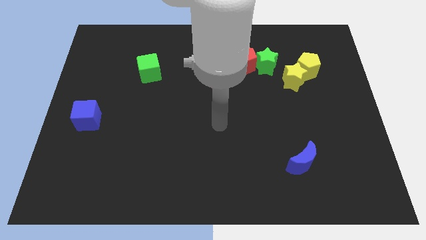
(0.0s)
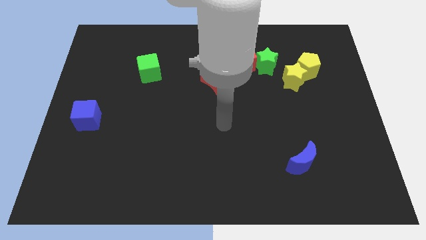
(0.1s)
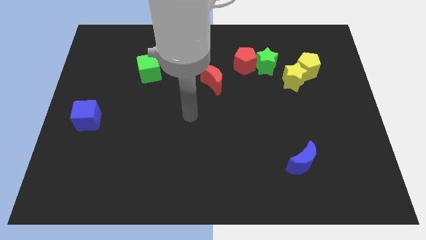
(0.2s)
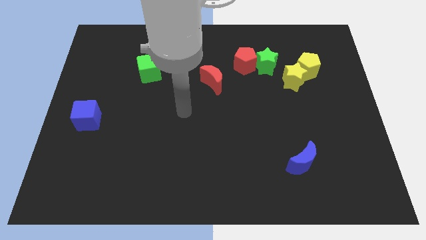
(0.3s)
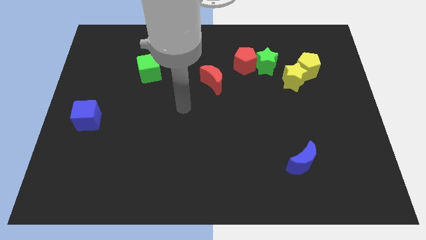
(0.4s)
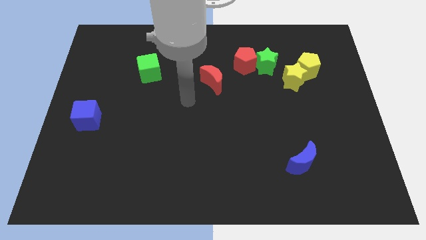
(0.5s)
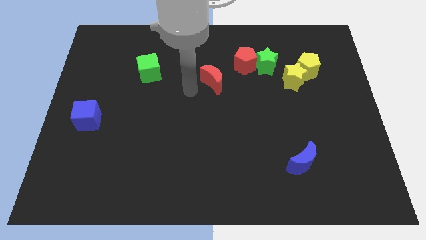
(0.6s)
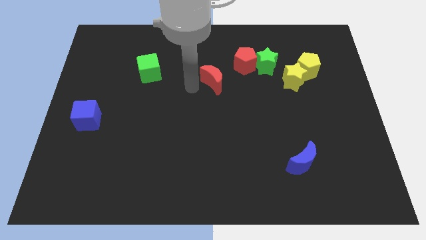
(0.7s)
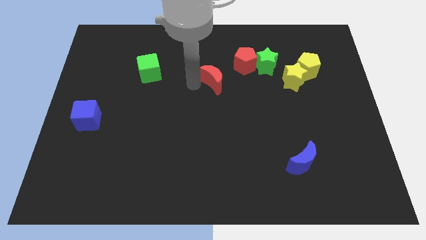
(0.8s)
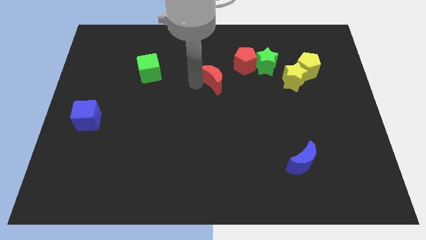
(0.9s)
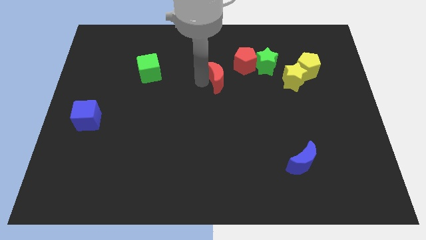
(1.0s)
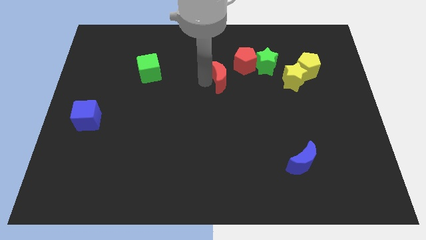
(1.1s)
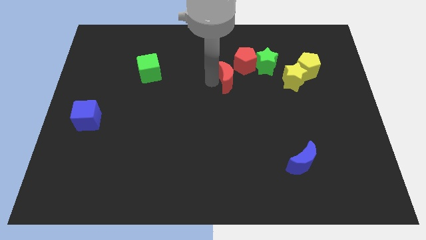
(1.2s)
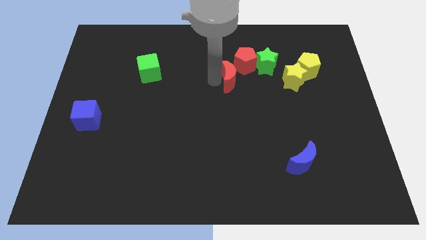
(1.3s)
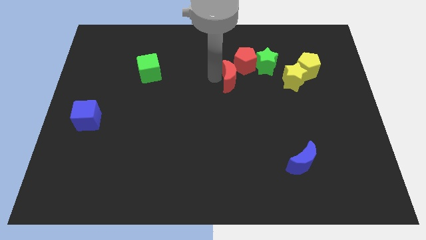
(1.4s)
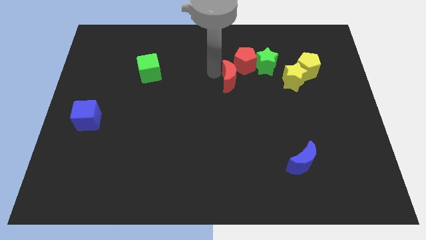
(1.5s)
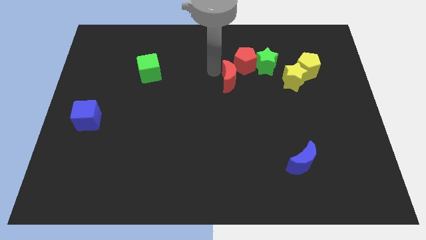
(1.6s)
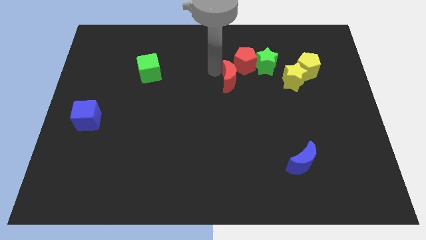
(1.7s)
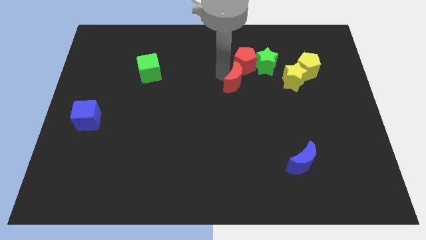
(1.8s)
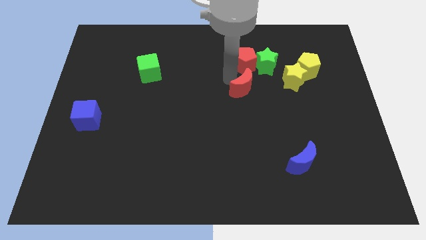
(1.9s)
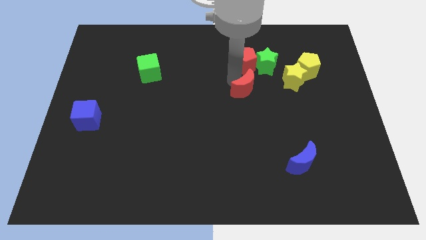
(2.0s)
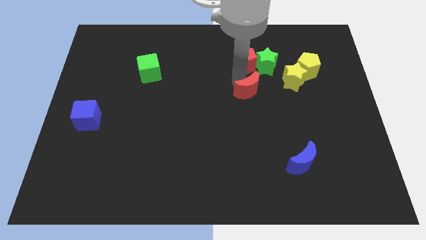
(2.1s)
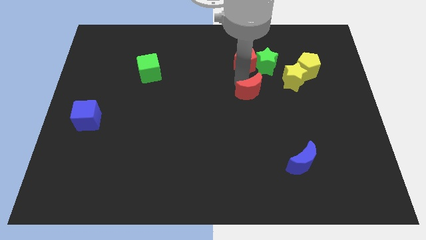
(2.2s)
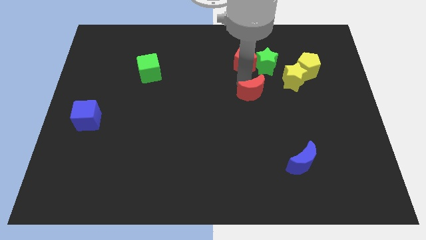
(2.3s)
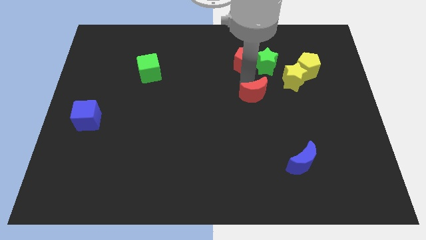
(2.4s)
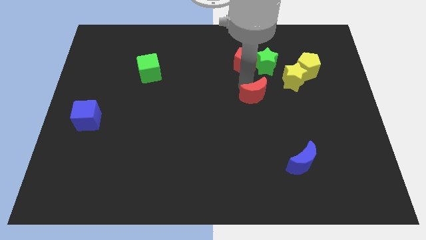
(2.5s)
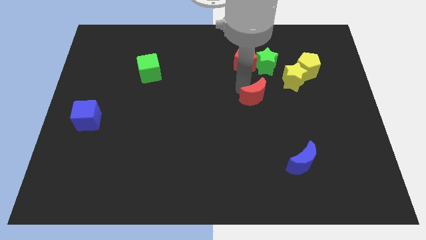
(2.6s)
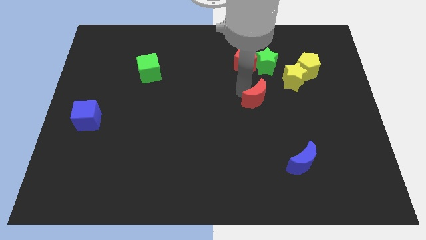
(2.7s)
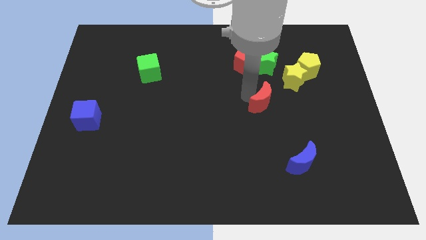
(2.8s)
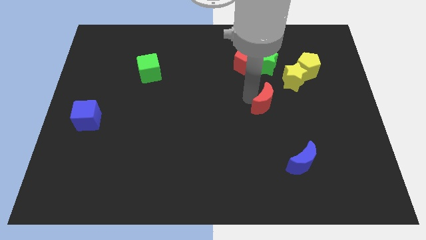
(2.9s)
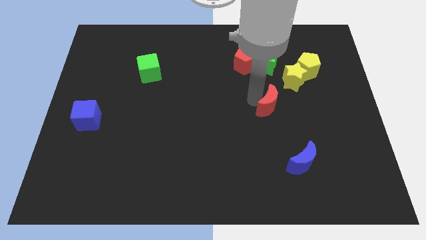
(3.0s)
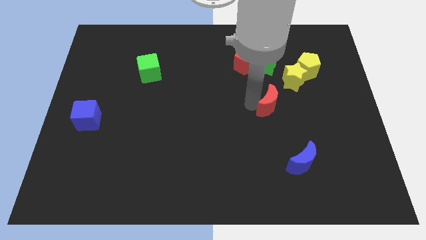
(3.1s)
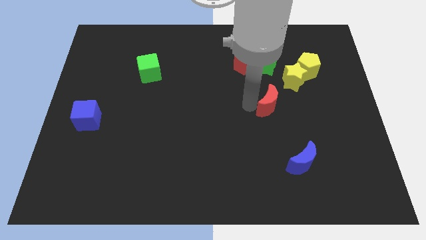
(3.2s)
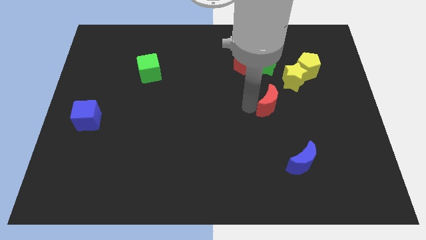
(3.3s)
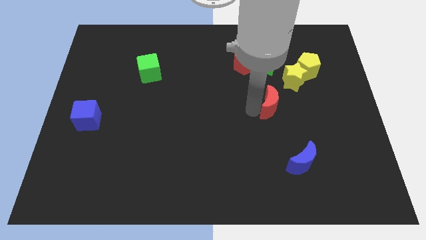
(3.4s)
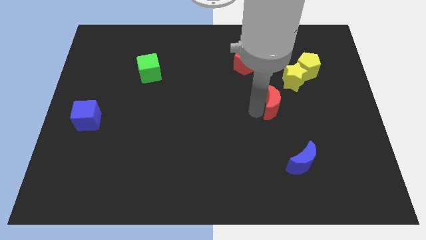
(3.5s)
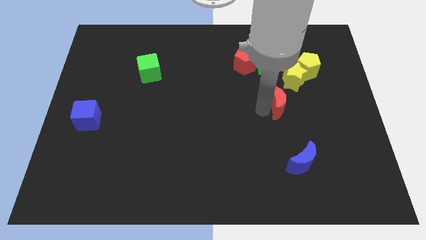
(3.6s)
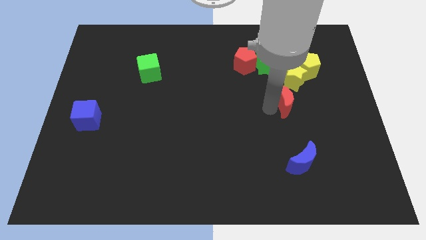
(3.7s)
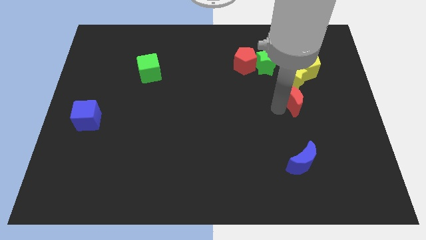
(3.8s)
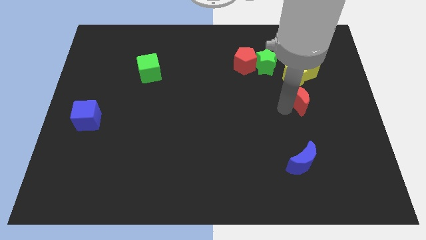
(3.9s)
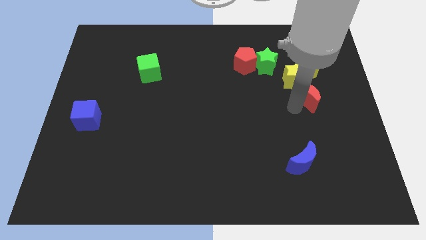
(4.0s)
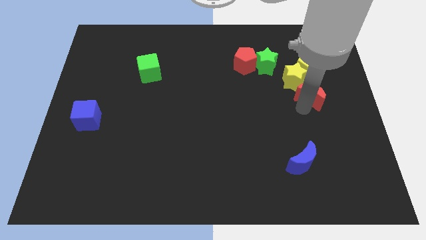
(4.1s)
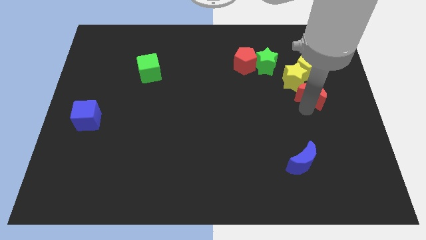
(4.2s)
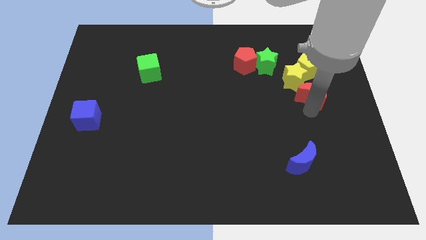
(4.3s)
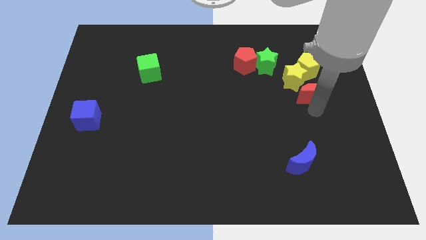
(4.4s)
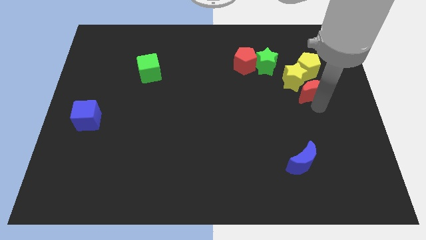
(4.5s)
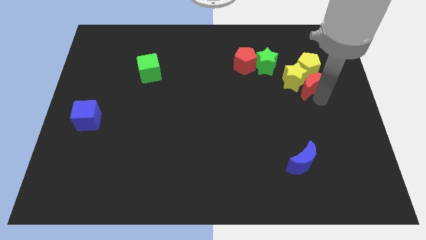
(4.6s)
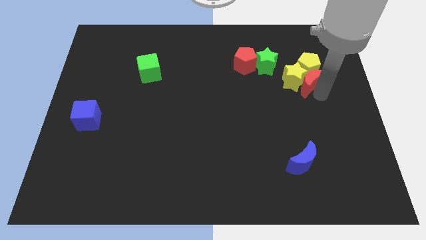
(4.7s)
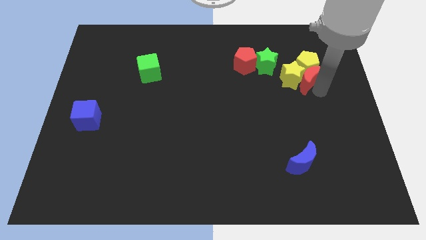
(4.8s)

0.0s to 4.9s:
move the red moon to the yellow pentagon

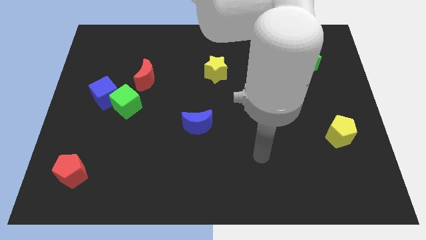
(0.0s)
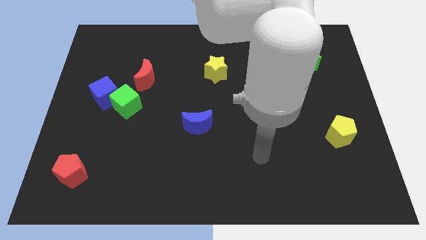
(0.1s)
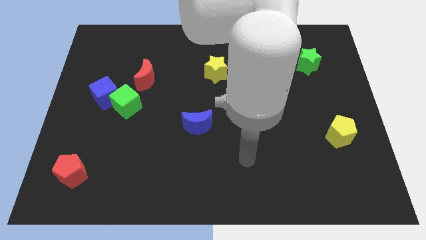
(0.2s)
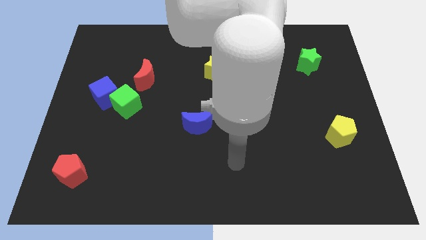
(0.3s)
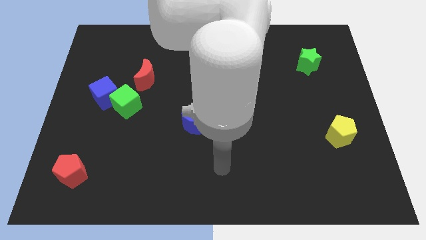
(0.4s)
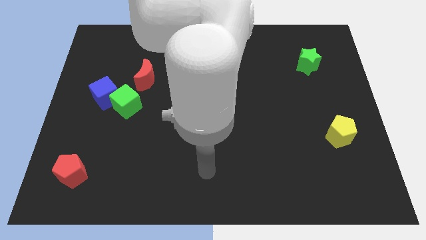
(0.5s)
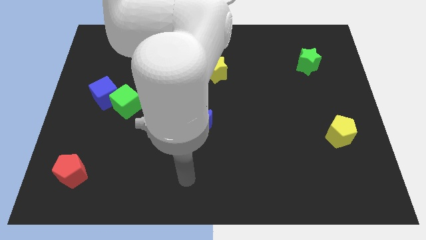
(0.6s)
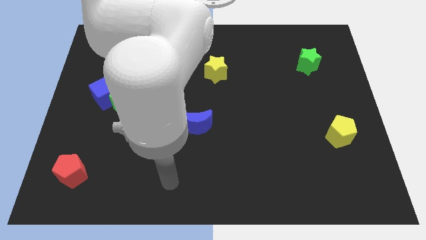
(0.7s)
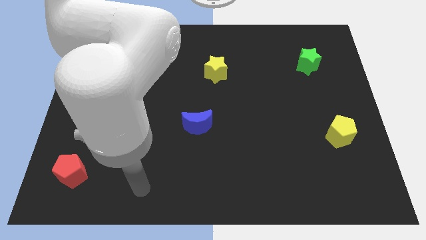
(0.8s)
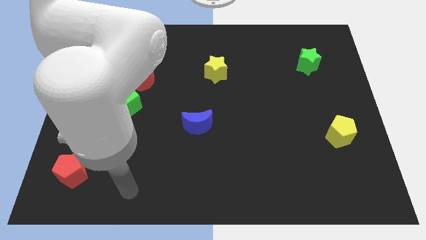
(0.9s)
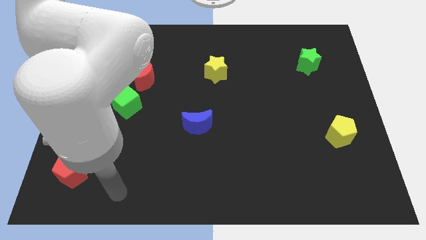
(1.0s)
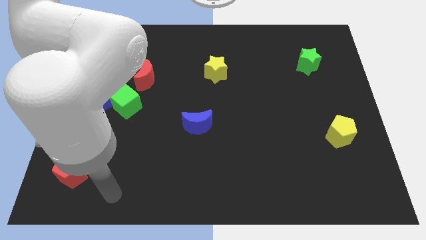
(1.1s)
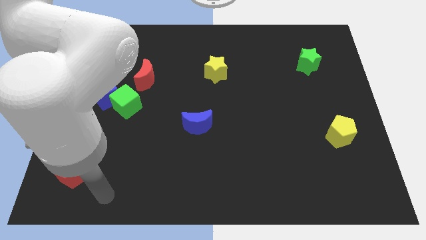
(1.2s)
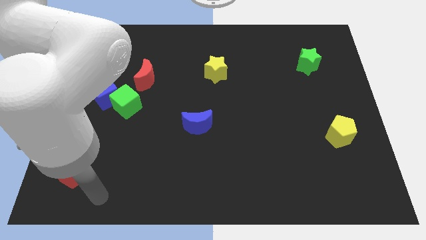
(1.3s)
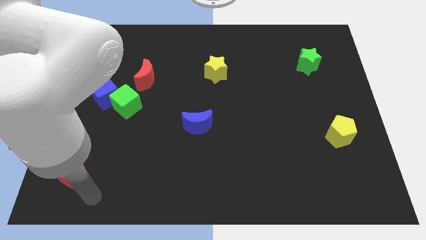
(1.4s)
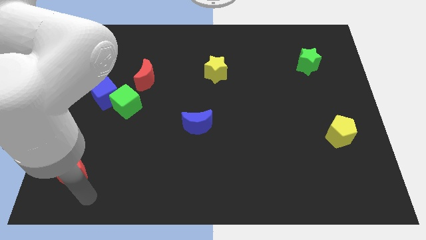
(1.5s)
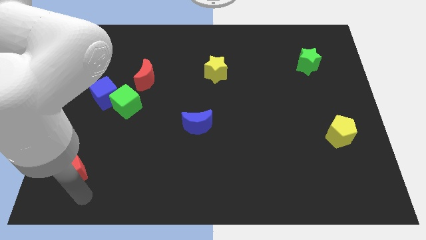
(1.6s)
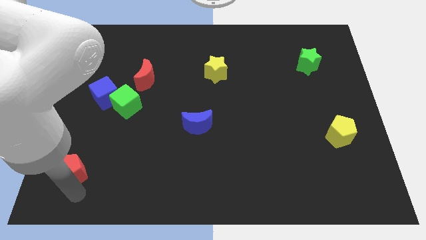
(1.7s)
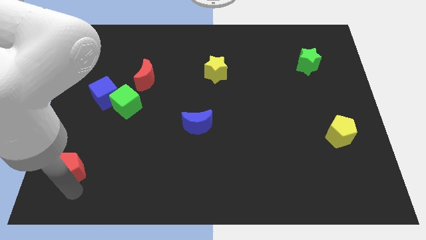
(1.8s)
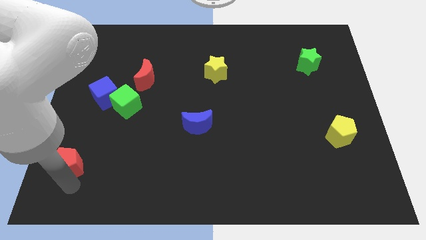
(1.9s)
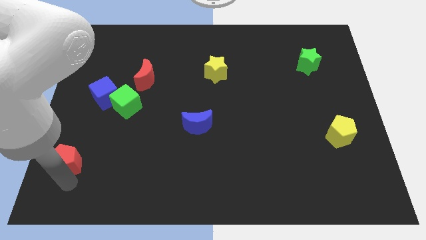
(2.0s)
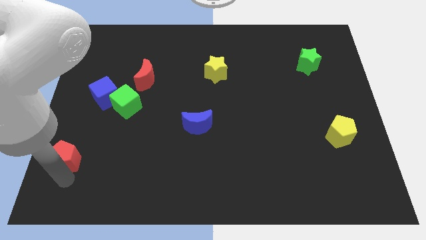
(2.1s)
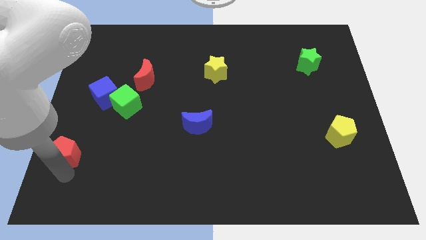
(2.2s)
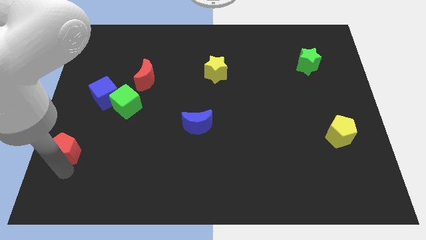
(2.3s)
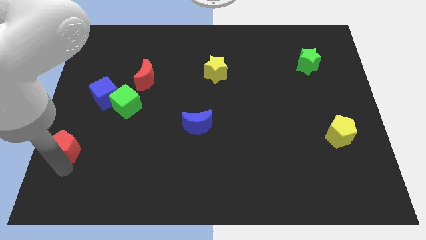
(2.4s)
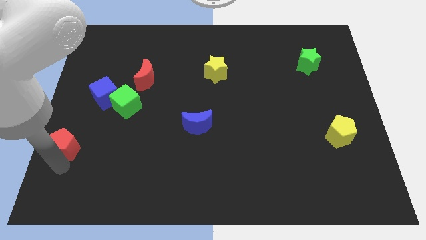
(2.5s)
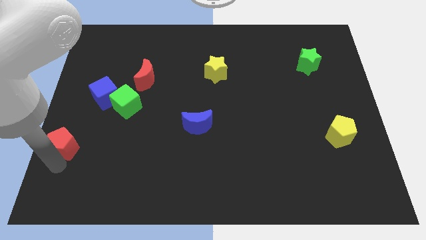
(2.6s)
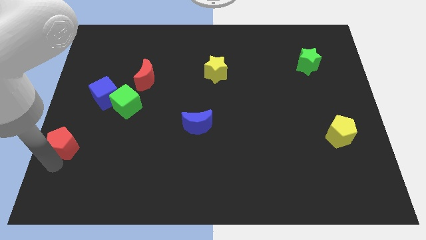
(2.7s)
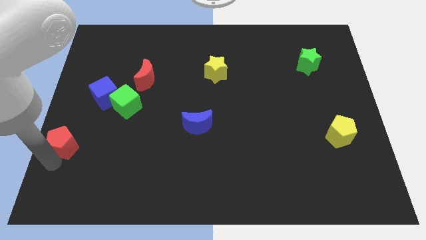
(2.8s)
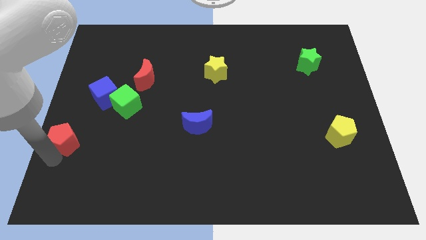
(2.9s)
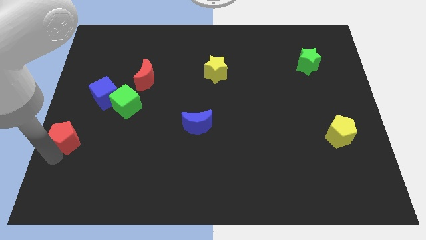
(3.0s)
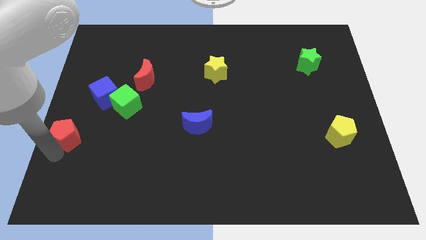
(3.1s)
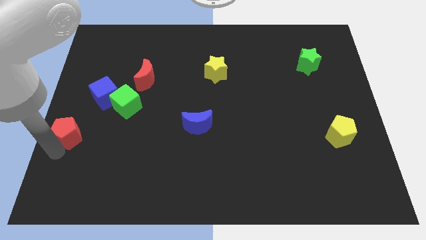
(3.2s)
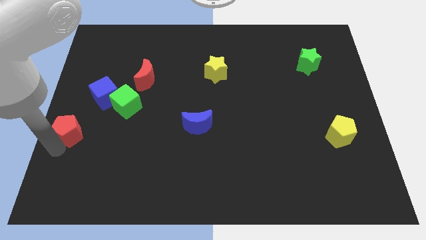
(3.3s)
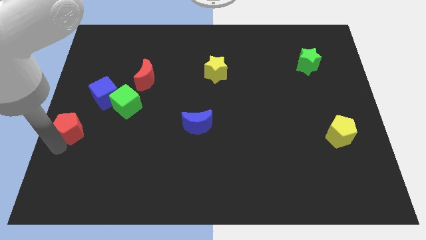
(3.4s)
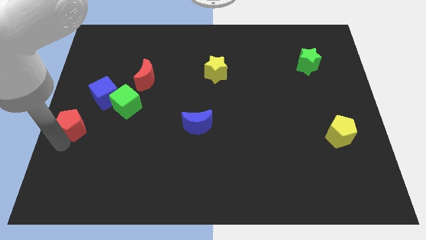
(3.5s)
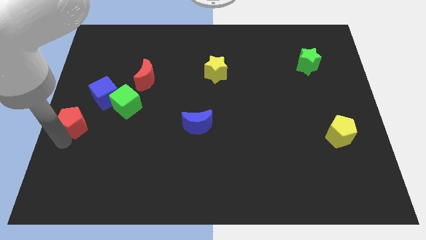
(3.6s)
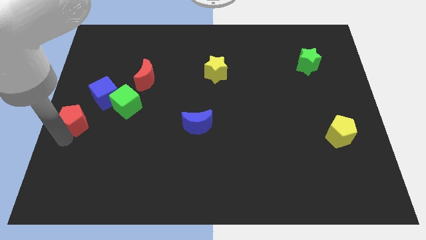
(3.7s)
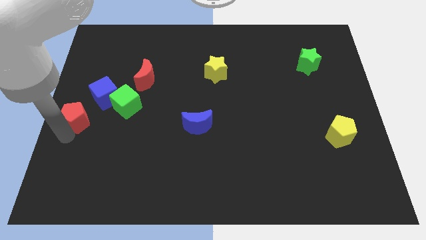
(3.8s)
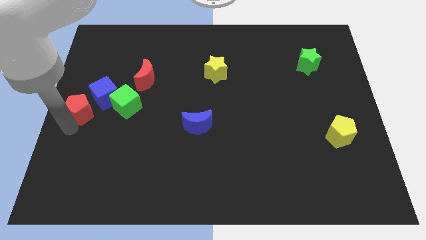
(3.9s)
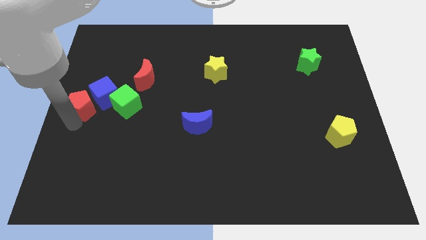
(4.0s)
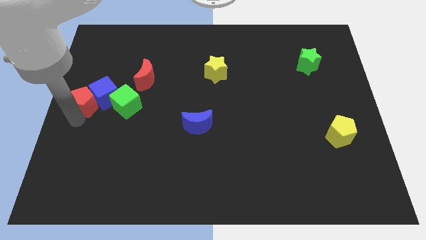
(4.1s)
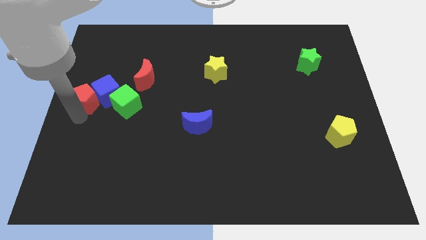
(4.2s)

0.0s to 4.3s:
push the red pentagon to the blue cube
